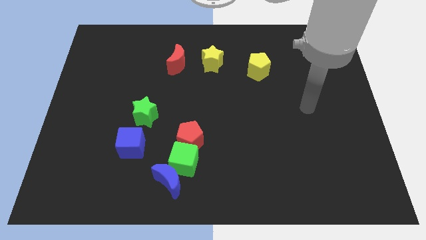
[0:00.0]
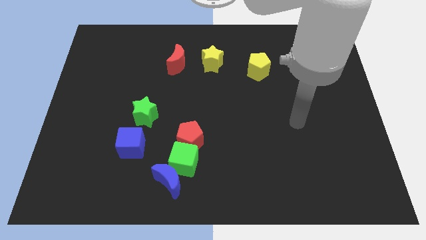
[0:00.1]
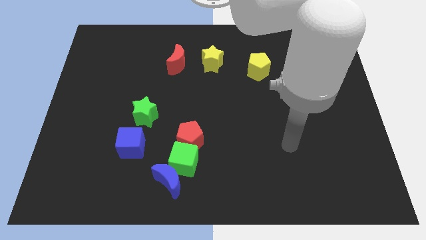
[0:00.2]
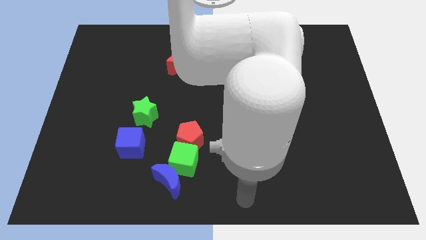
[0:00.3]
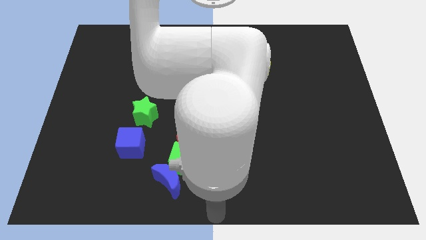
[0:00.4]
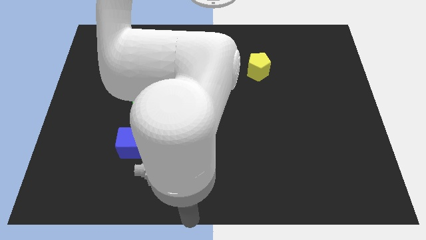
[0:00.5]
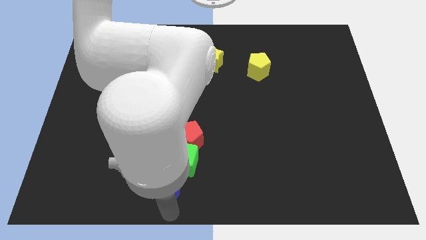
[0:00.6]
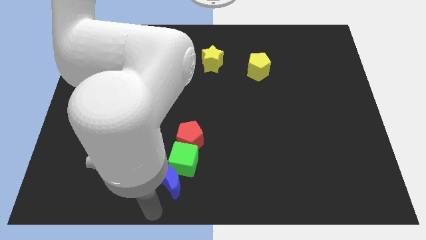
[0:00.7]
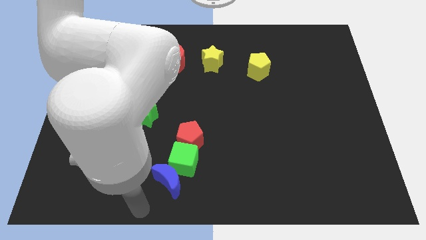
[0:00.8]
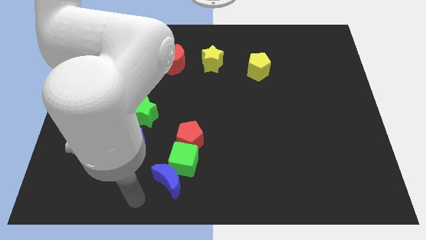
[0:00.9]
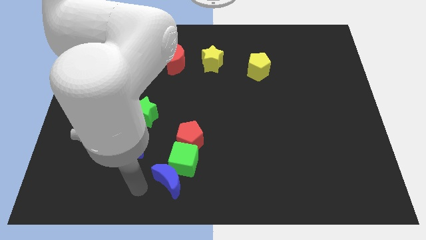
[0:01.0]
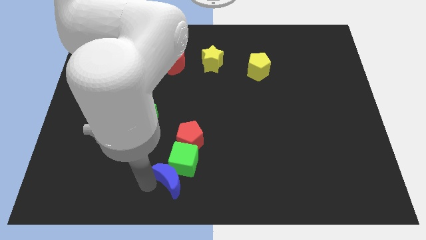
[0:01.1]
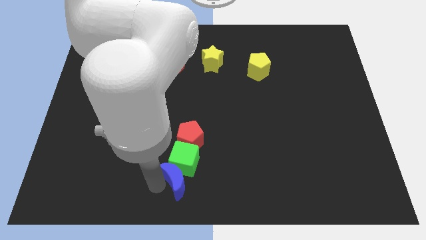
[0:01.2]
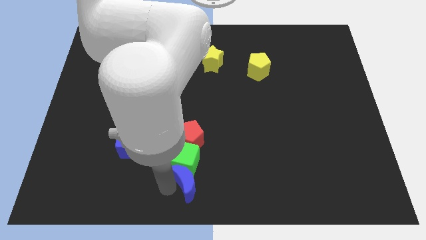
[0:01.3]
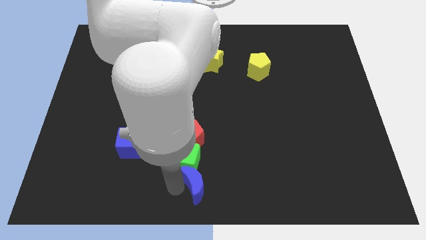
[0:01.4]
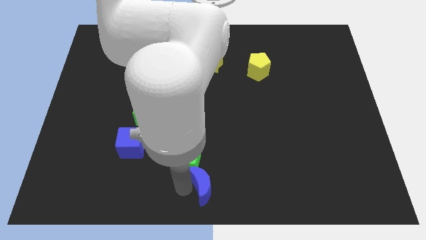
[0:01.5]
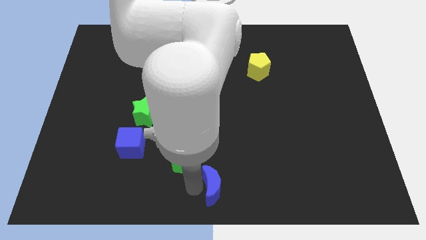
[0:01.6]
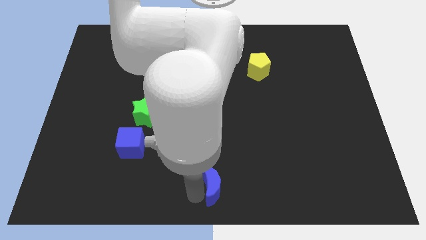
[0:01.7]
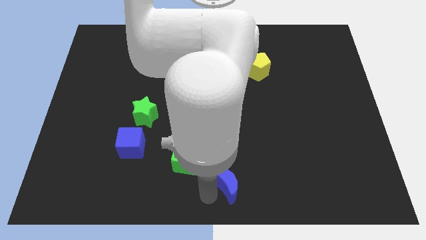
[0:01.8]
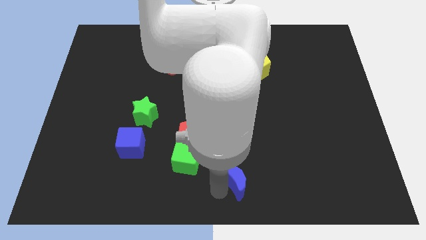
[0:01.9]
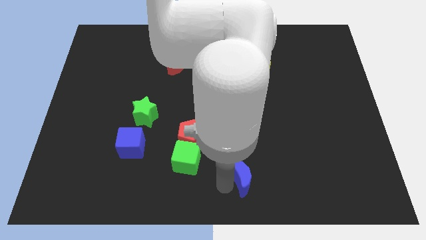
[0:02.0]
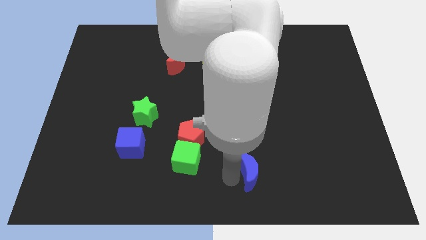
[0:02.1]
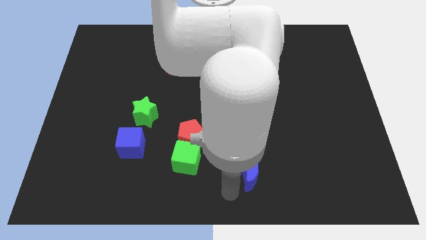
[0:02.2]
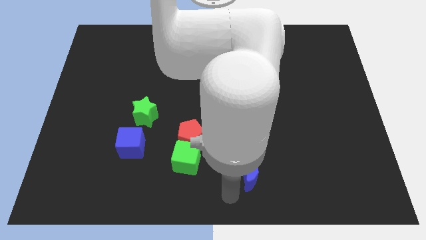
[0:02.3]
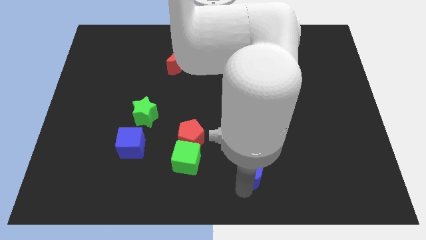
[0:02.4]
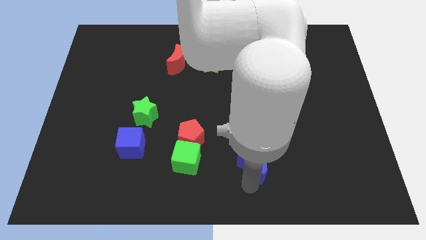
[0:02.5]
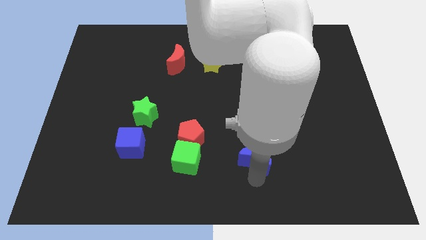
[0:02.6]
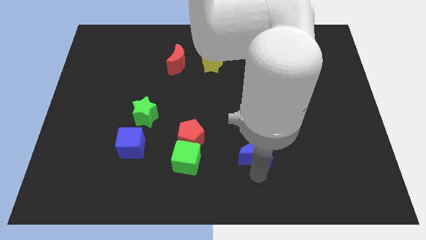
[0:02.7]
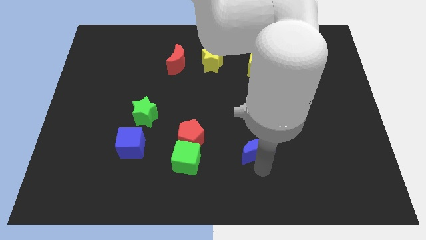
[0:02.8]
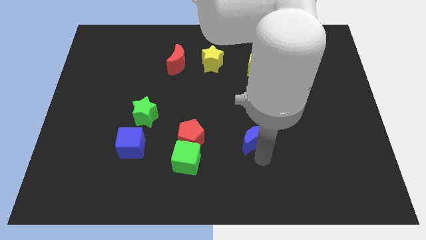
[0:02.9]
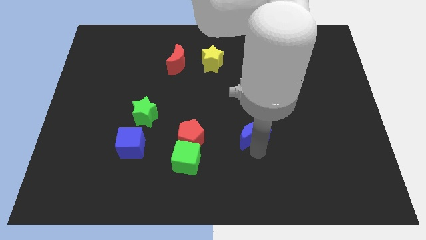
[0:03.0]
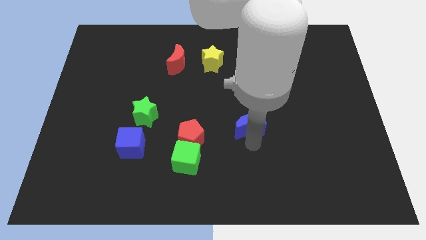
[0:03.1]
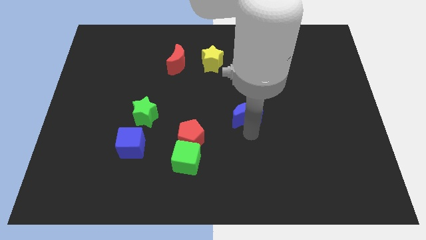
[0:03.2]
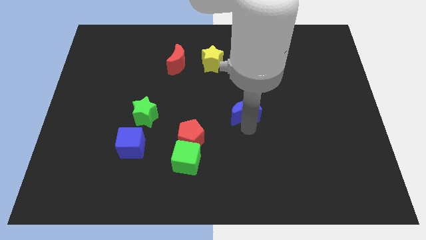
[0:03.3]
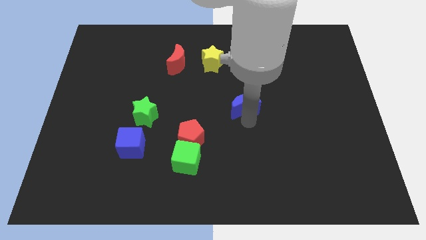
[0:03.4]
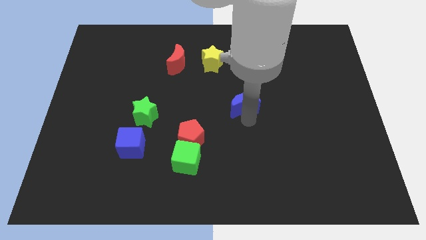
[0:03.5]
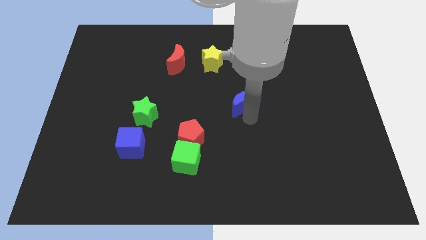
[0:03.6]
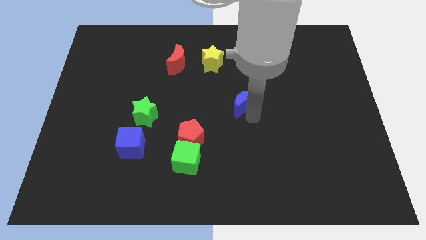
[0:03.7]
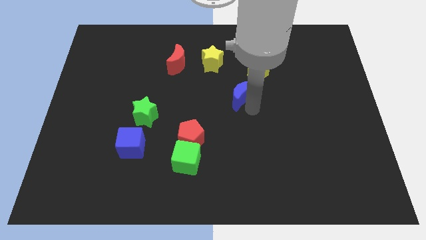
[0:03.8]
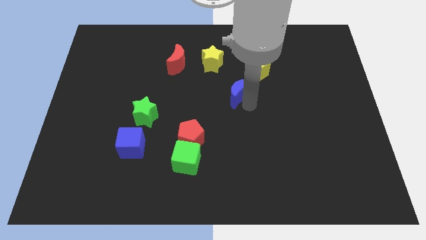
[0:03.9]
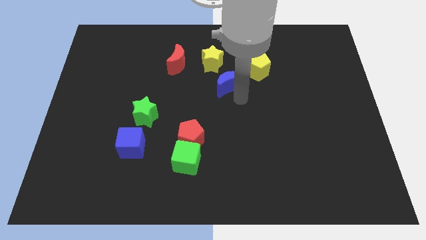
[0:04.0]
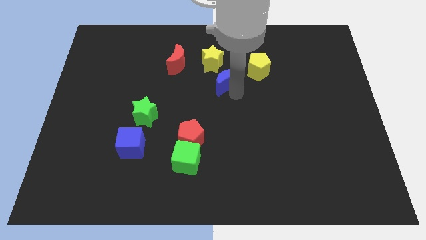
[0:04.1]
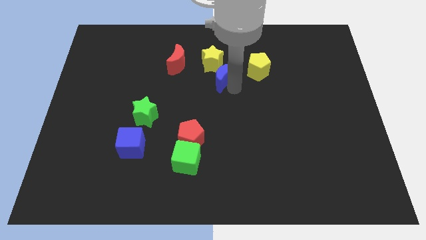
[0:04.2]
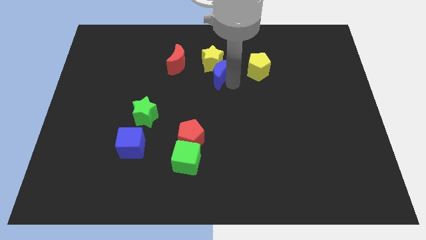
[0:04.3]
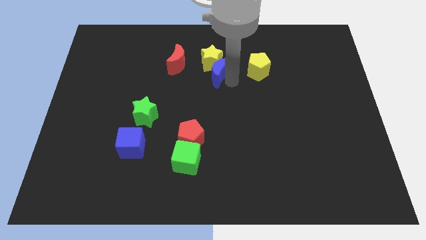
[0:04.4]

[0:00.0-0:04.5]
put the blue moon close to the yellow star

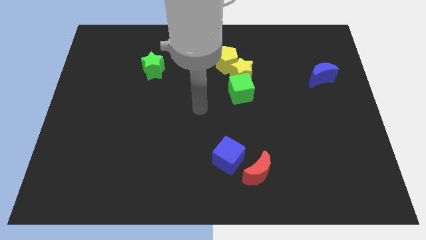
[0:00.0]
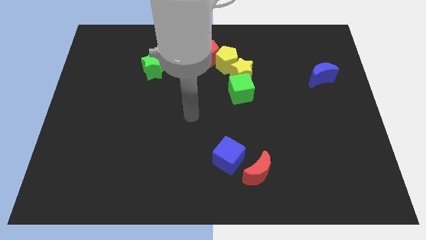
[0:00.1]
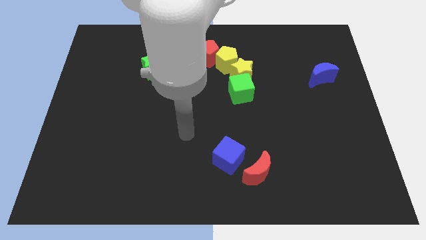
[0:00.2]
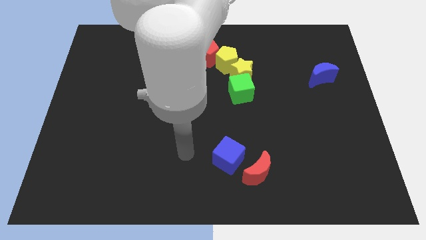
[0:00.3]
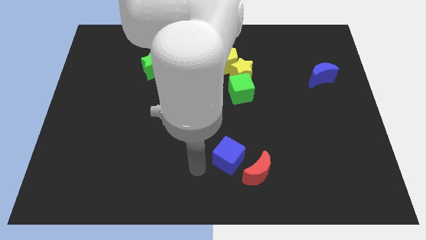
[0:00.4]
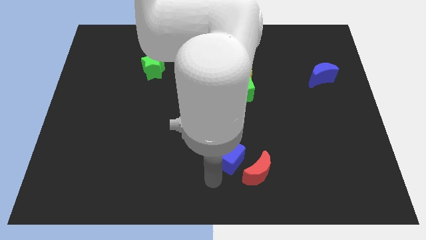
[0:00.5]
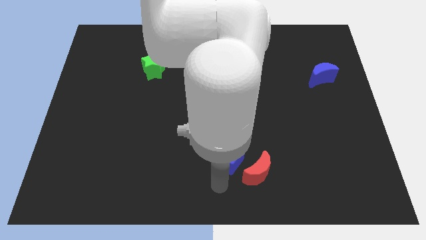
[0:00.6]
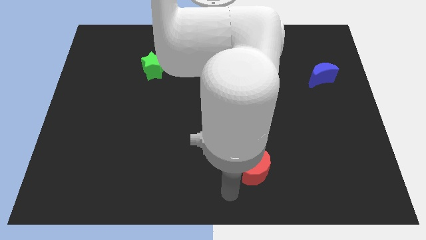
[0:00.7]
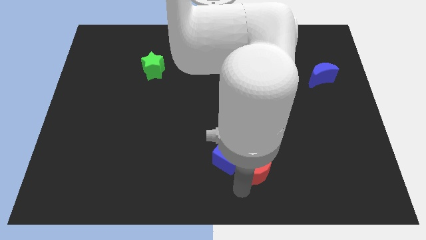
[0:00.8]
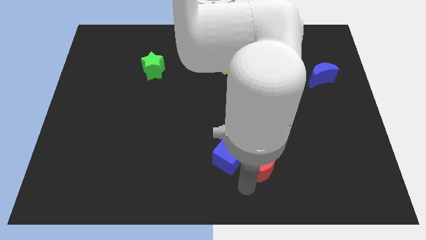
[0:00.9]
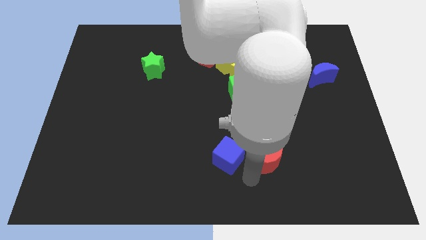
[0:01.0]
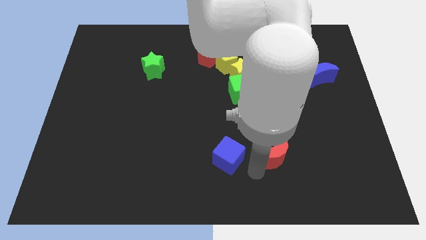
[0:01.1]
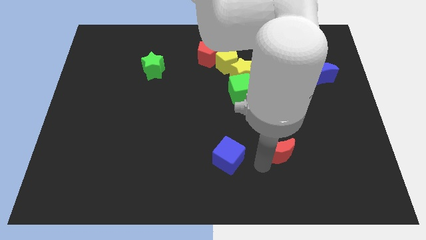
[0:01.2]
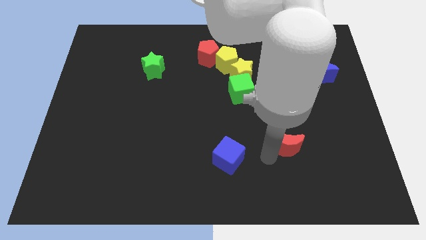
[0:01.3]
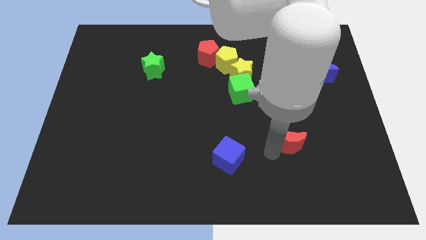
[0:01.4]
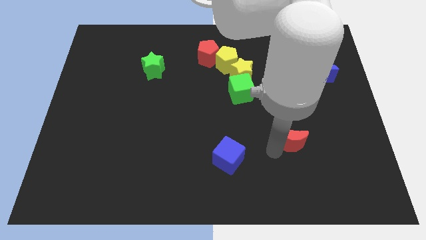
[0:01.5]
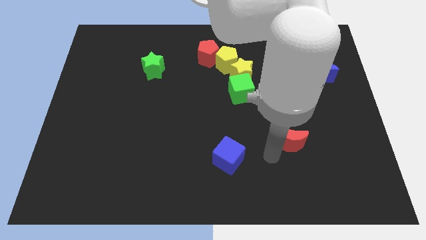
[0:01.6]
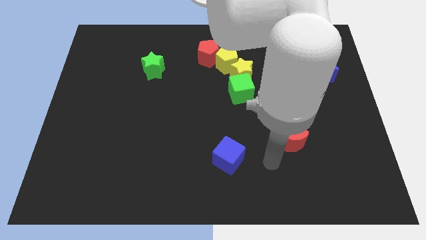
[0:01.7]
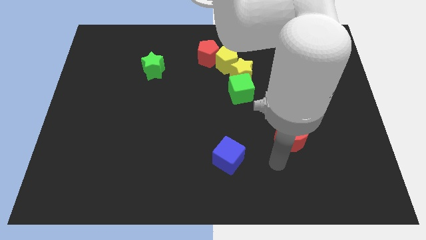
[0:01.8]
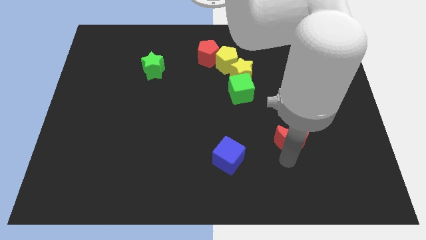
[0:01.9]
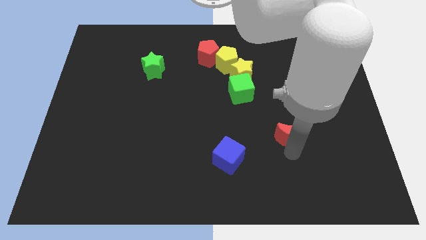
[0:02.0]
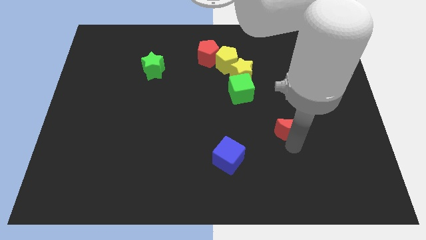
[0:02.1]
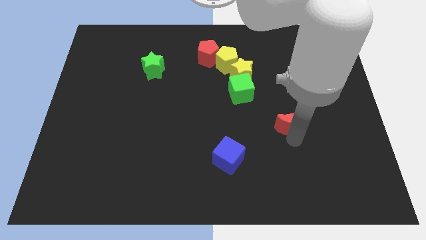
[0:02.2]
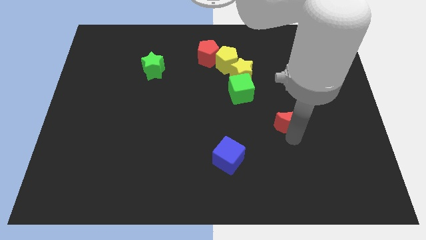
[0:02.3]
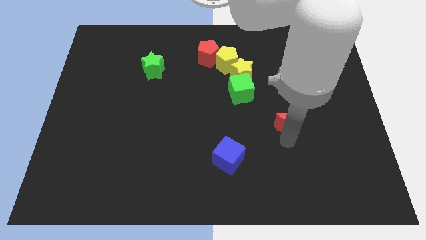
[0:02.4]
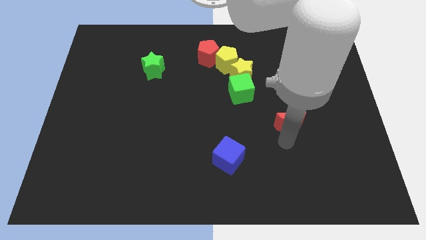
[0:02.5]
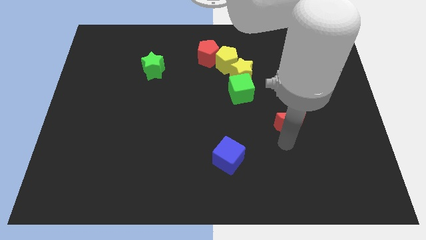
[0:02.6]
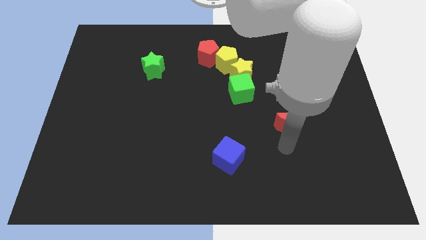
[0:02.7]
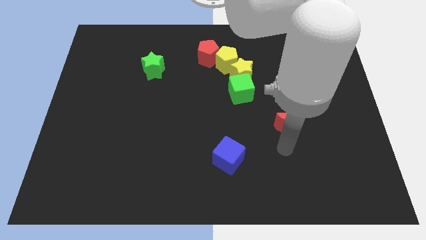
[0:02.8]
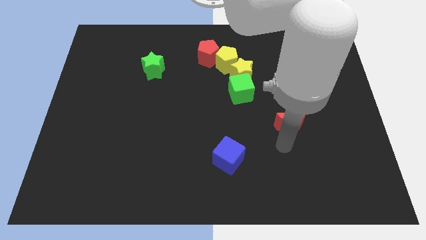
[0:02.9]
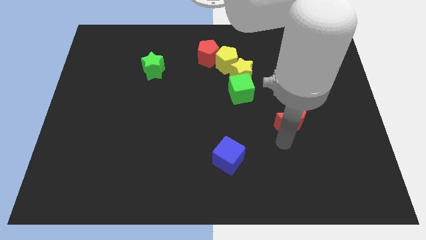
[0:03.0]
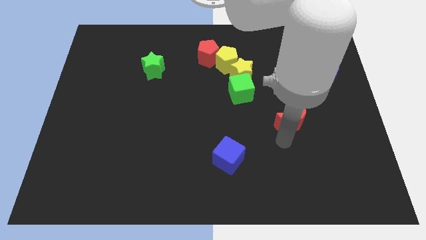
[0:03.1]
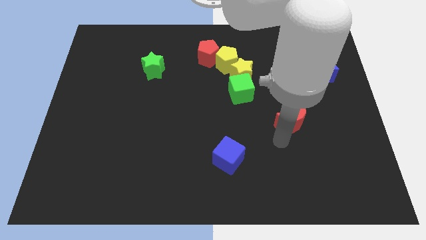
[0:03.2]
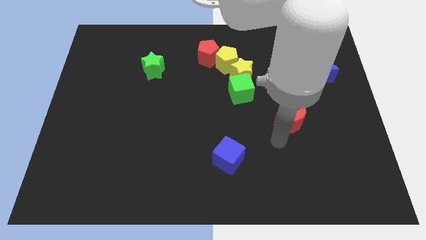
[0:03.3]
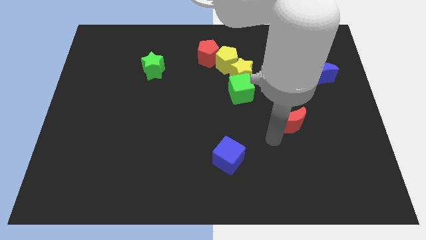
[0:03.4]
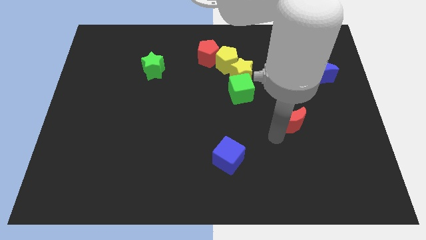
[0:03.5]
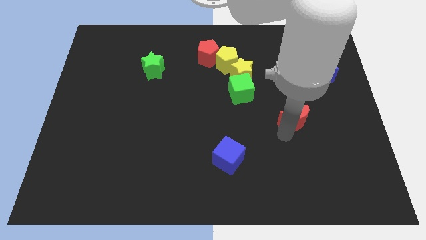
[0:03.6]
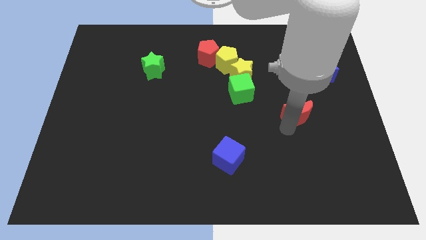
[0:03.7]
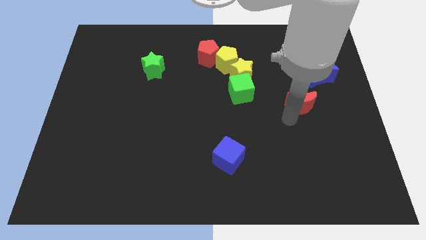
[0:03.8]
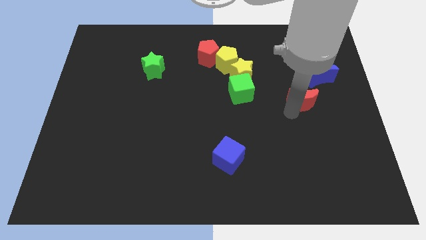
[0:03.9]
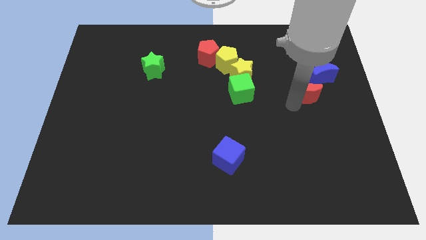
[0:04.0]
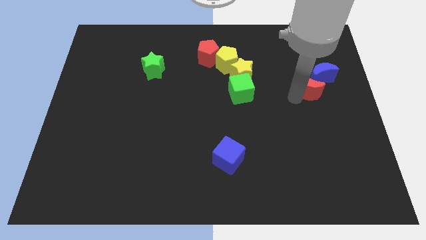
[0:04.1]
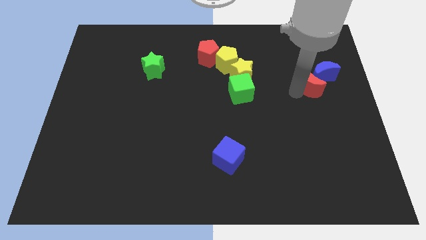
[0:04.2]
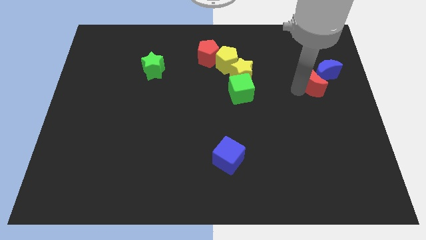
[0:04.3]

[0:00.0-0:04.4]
push the red moon towards the blue moon
